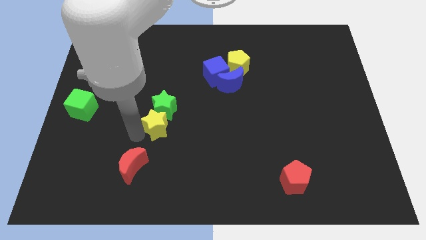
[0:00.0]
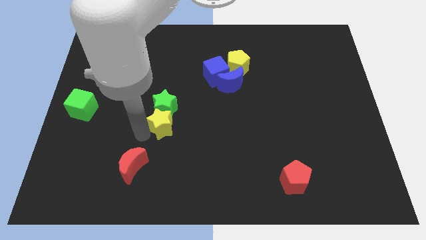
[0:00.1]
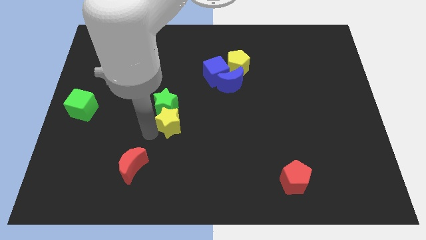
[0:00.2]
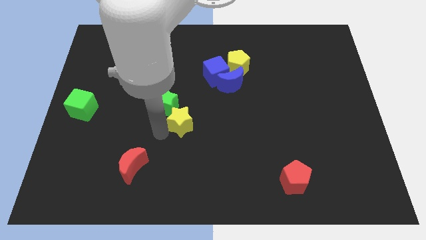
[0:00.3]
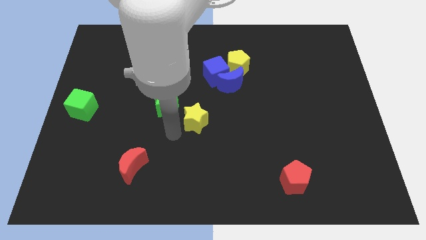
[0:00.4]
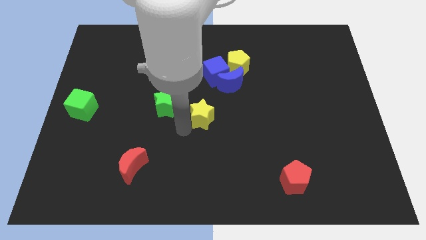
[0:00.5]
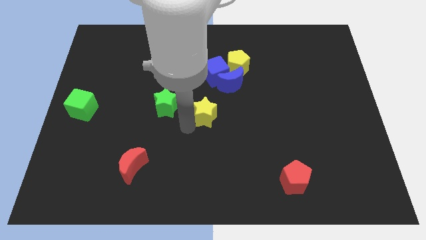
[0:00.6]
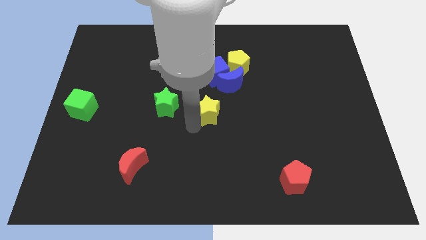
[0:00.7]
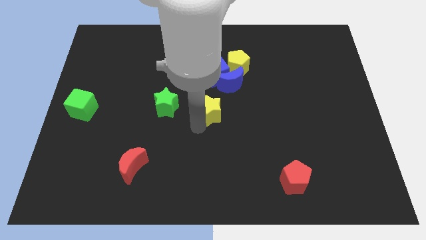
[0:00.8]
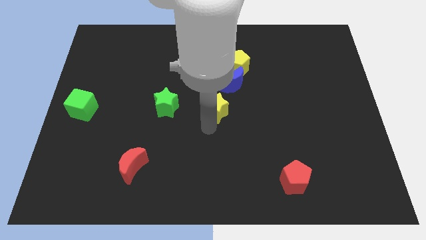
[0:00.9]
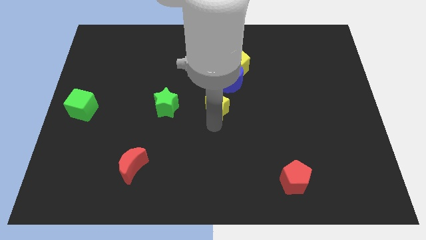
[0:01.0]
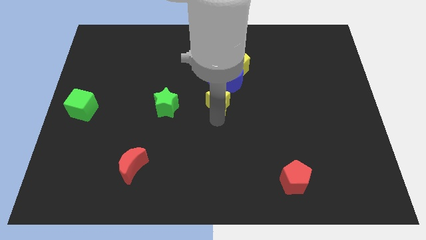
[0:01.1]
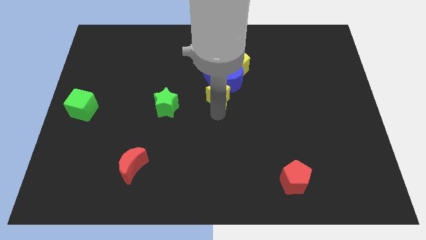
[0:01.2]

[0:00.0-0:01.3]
place the yellow star at the right side of the green star

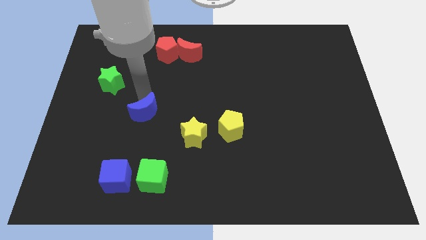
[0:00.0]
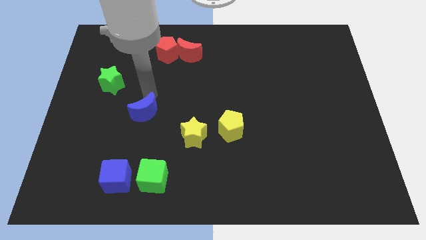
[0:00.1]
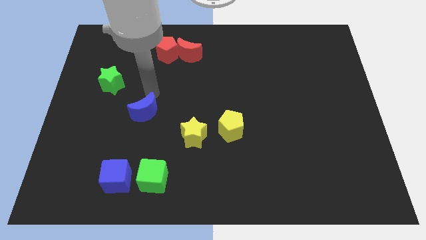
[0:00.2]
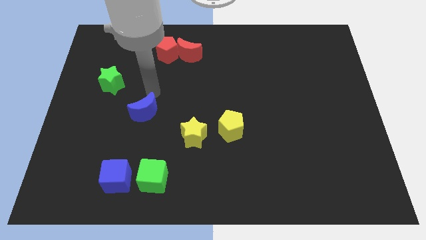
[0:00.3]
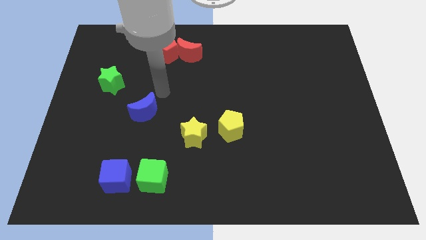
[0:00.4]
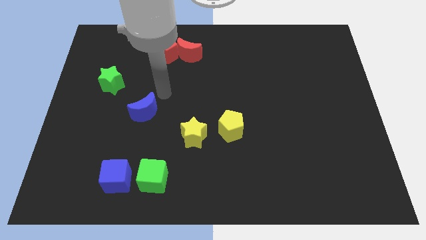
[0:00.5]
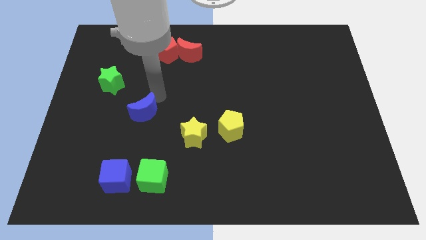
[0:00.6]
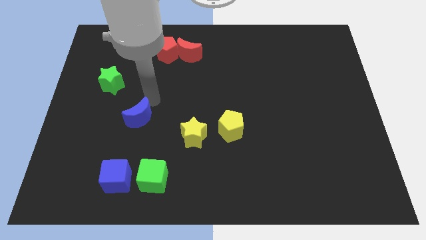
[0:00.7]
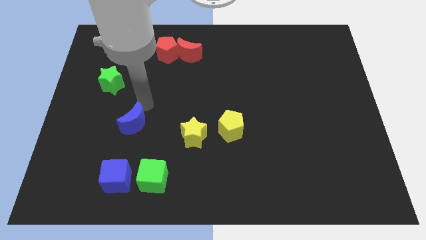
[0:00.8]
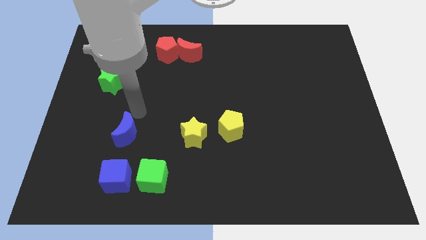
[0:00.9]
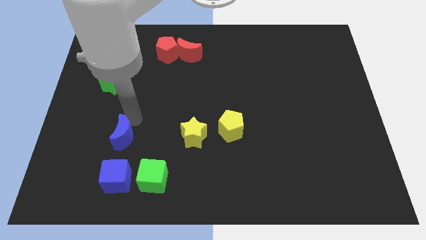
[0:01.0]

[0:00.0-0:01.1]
place the blue moon left to the yellow star

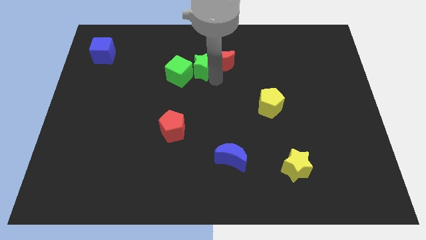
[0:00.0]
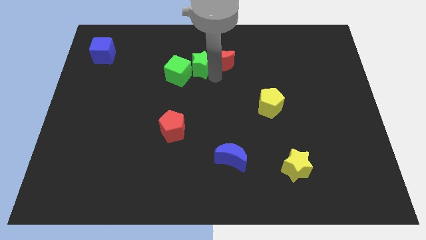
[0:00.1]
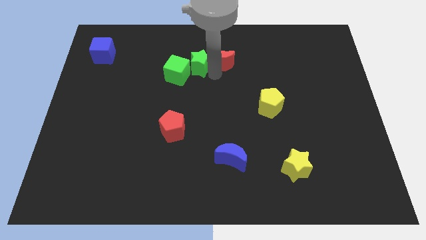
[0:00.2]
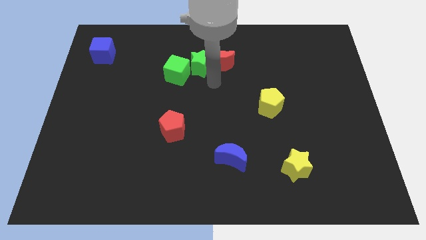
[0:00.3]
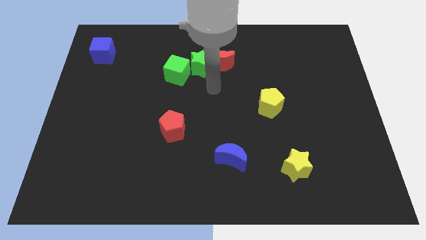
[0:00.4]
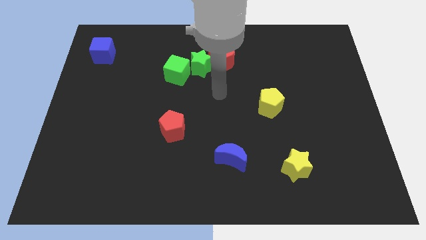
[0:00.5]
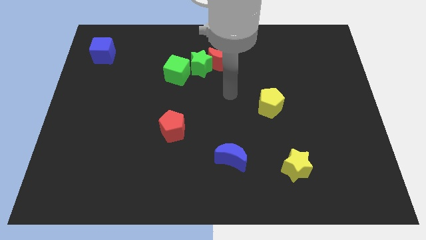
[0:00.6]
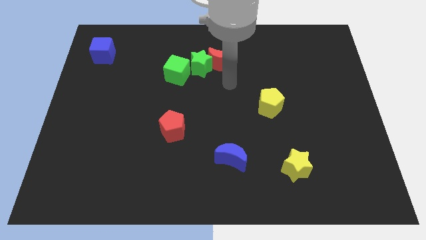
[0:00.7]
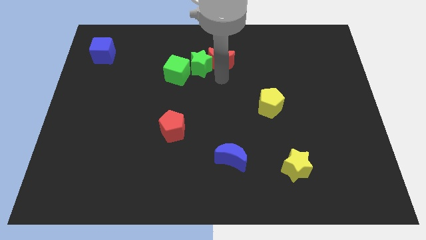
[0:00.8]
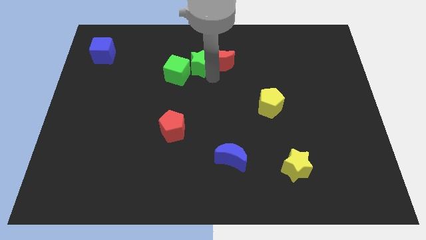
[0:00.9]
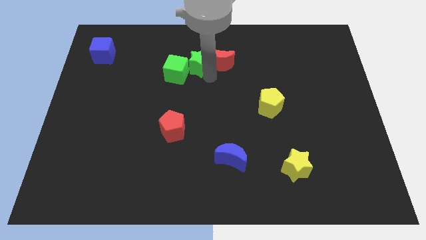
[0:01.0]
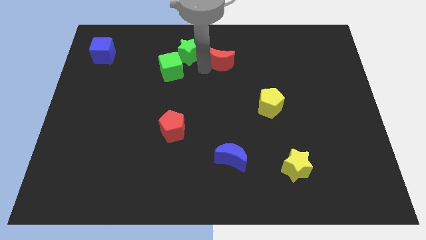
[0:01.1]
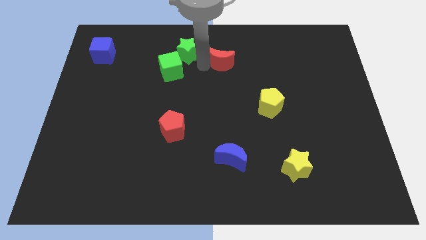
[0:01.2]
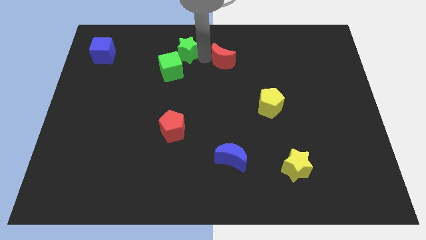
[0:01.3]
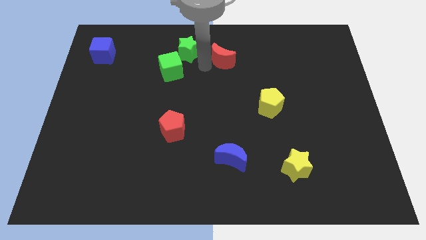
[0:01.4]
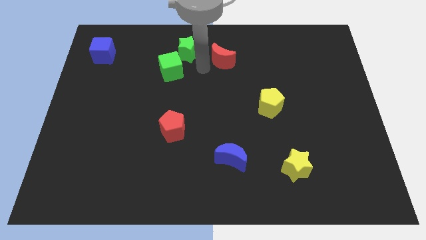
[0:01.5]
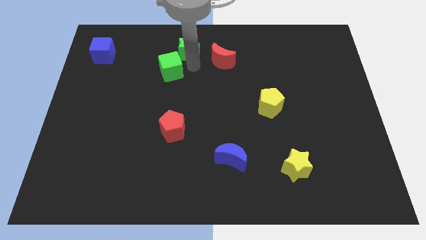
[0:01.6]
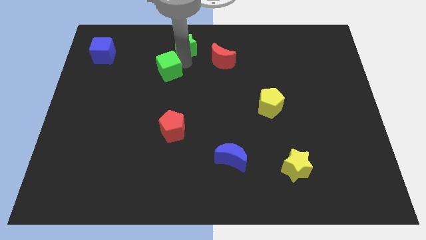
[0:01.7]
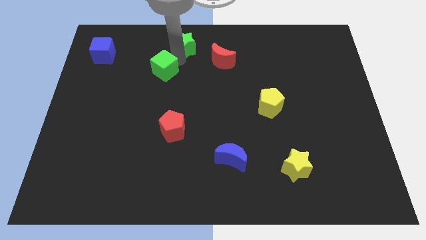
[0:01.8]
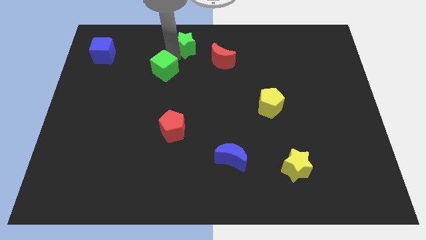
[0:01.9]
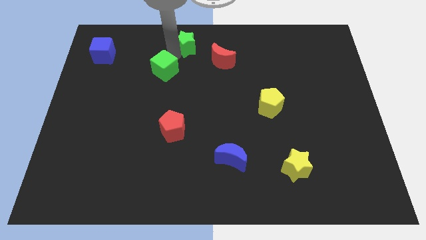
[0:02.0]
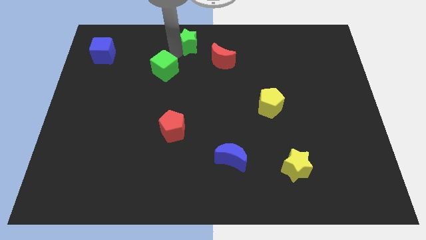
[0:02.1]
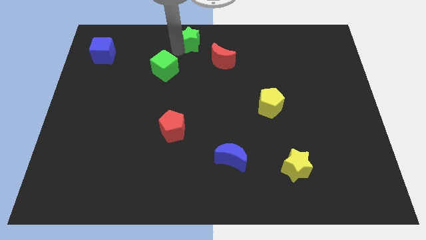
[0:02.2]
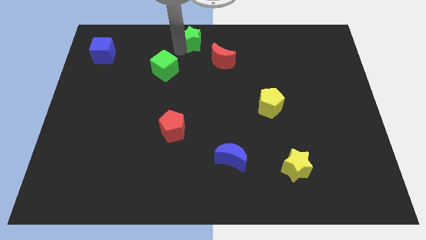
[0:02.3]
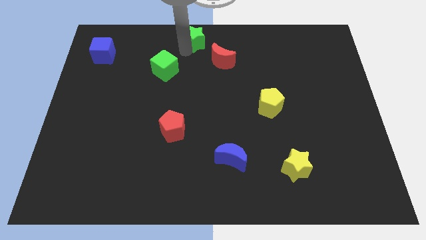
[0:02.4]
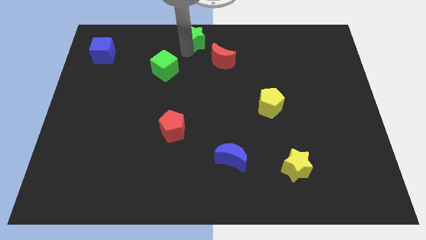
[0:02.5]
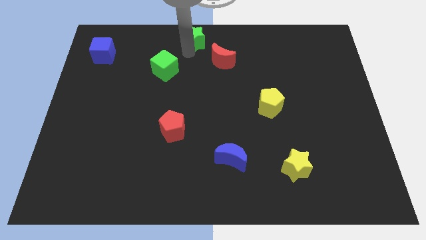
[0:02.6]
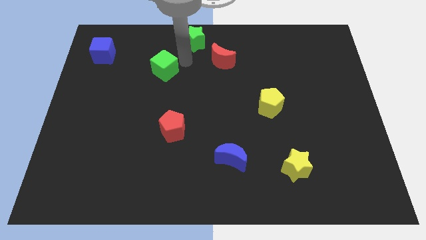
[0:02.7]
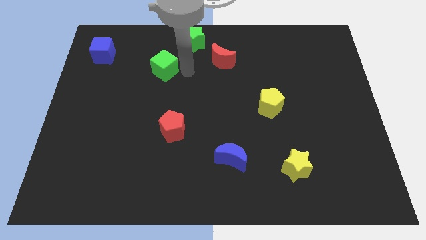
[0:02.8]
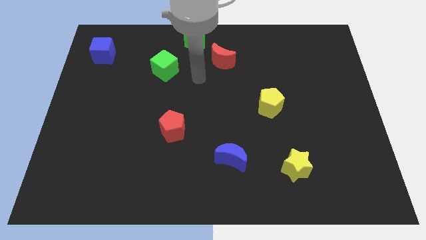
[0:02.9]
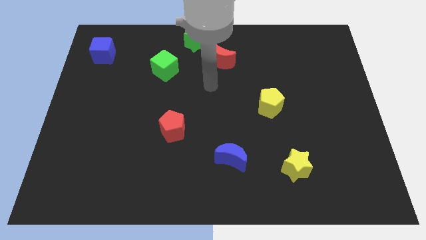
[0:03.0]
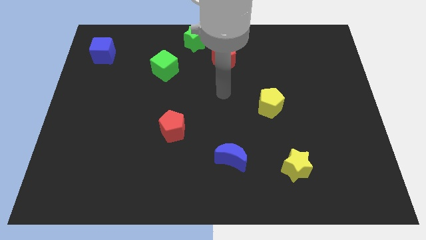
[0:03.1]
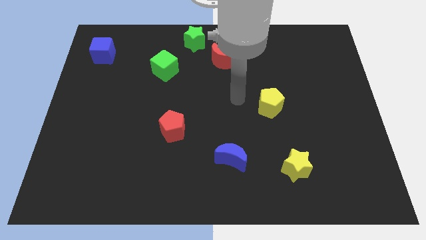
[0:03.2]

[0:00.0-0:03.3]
move the green star to the top center of the board

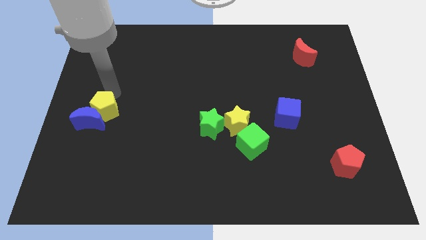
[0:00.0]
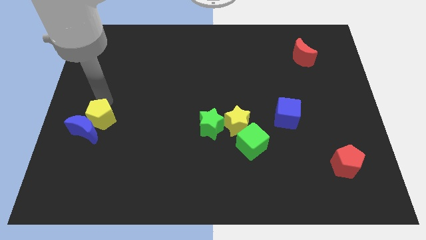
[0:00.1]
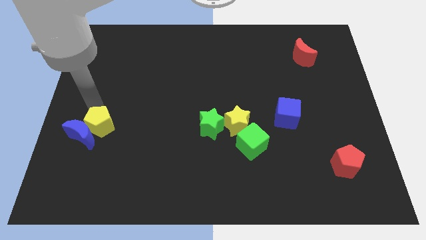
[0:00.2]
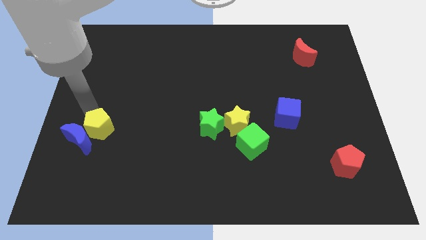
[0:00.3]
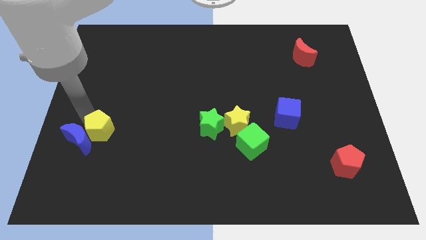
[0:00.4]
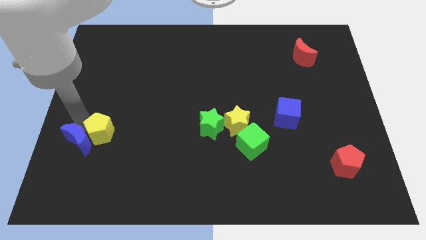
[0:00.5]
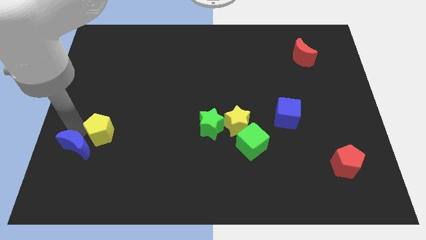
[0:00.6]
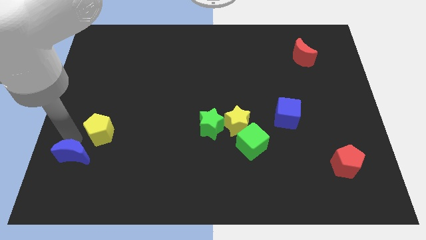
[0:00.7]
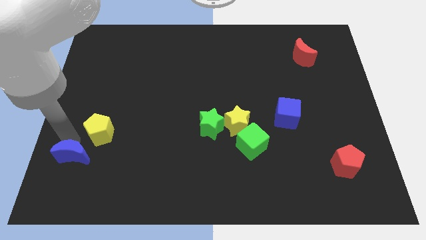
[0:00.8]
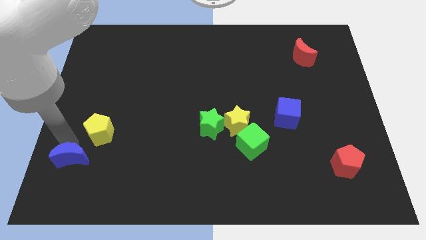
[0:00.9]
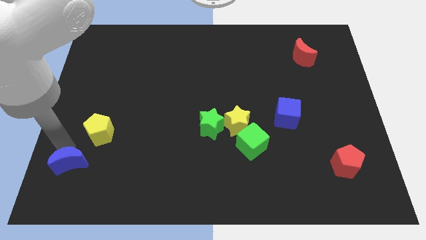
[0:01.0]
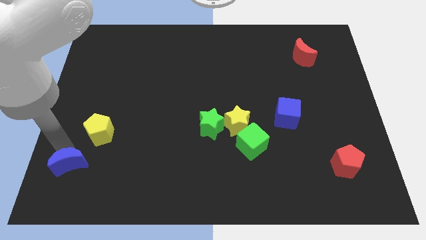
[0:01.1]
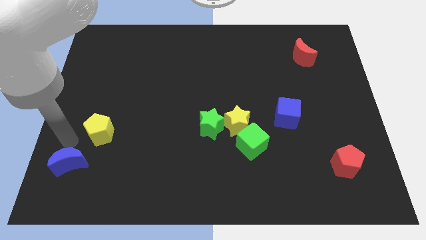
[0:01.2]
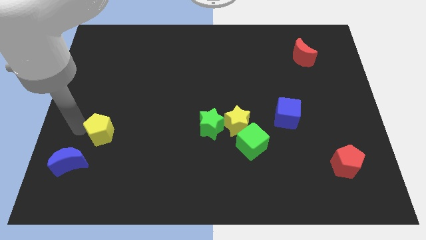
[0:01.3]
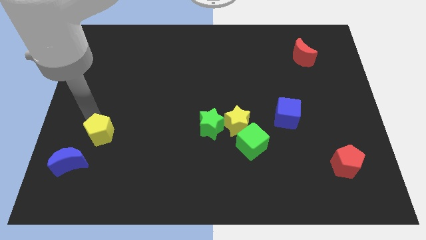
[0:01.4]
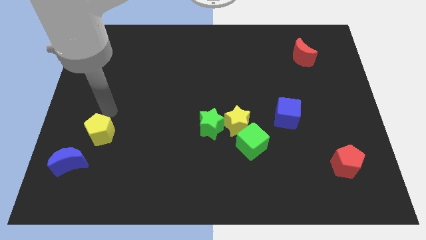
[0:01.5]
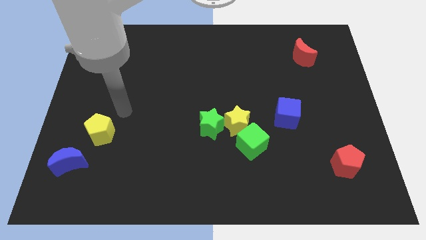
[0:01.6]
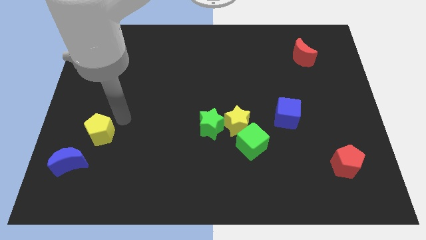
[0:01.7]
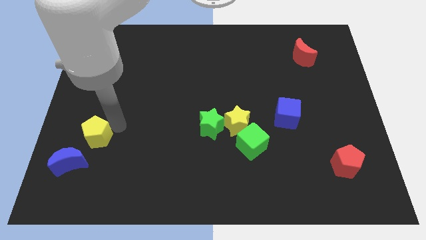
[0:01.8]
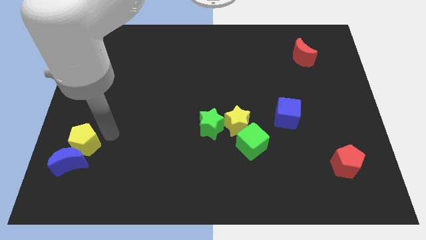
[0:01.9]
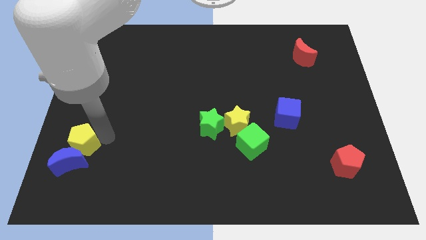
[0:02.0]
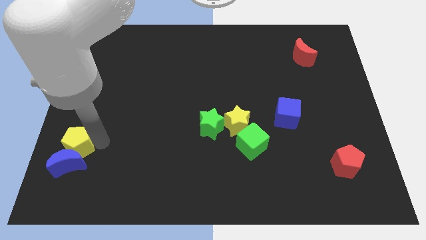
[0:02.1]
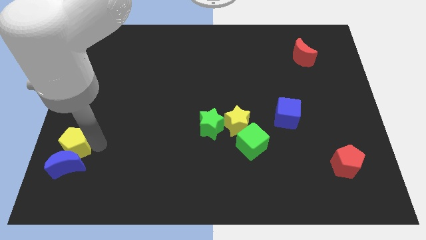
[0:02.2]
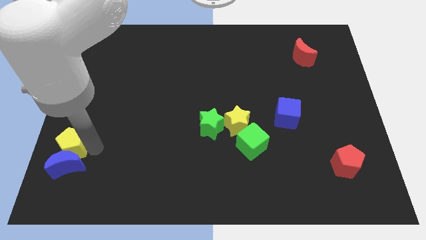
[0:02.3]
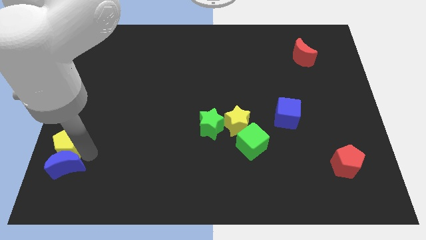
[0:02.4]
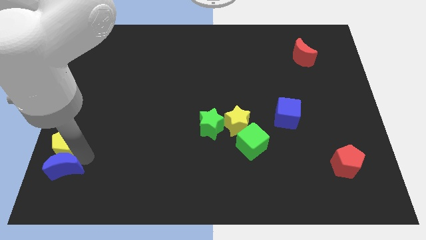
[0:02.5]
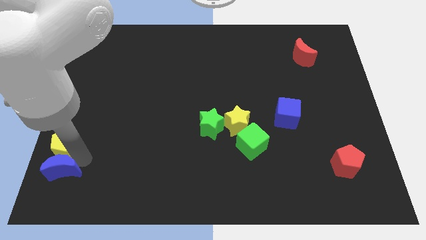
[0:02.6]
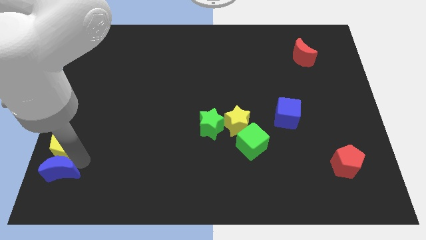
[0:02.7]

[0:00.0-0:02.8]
push the group of yellow pentagon and blue moon towards the bottom

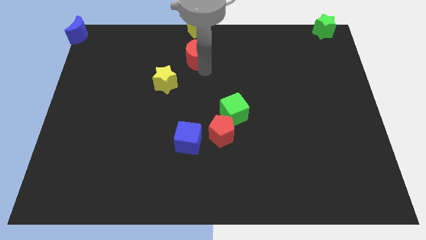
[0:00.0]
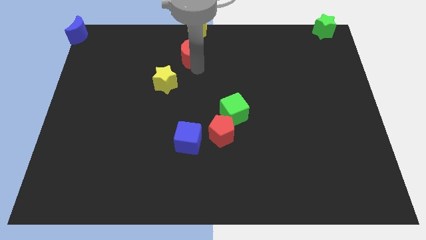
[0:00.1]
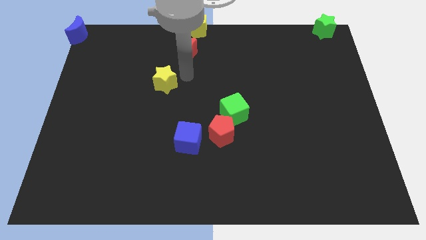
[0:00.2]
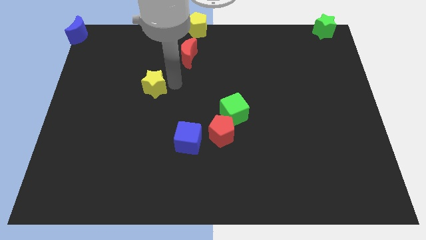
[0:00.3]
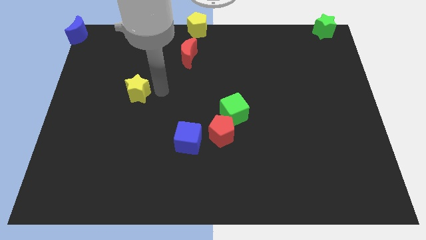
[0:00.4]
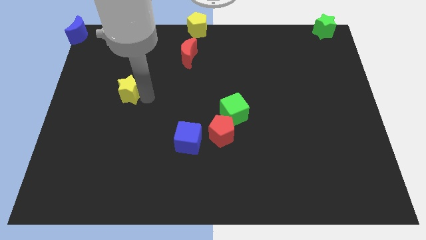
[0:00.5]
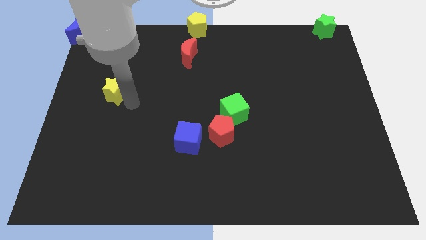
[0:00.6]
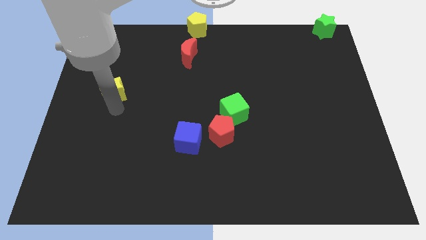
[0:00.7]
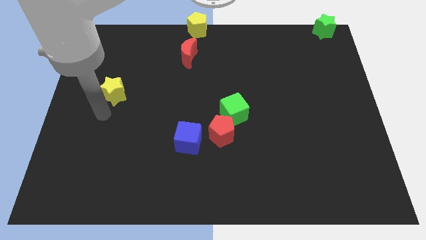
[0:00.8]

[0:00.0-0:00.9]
move the yellow star to the left
